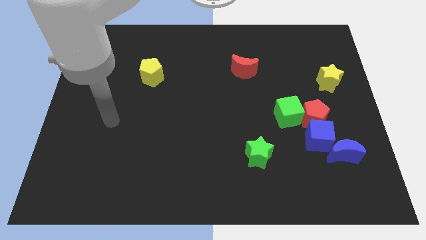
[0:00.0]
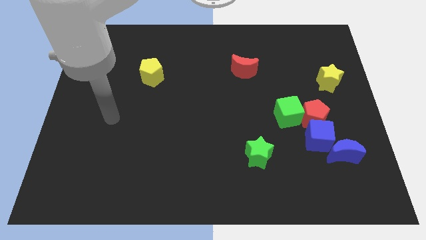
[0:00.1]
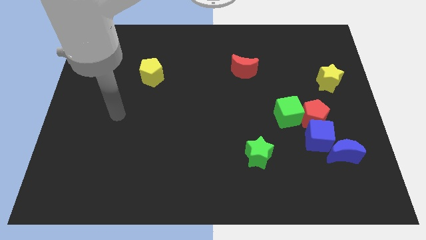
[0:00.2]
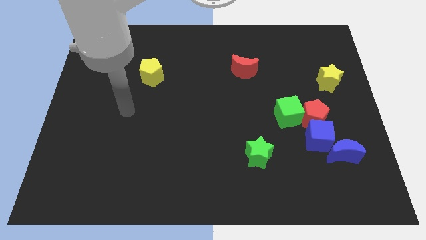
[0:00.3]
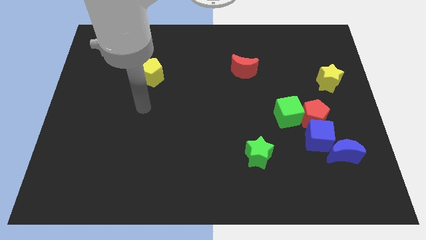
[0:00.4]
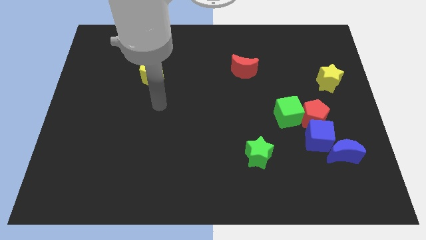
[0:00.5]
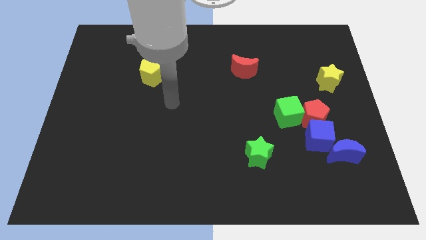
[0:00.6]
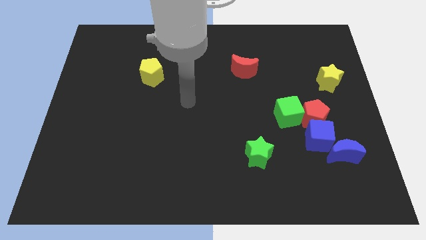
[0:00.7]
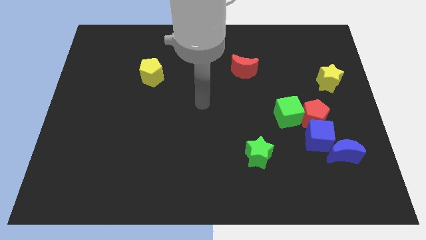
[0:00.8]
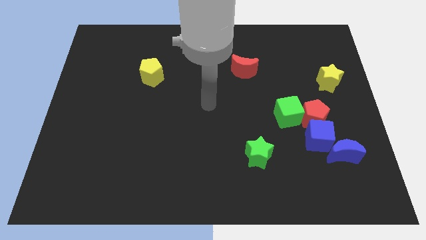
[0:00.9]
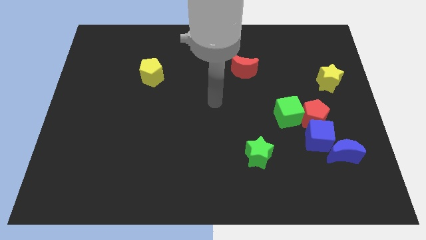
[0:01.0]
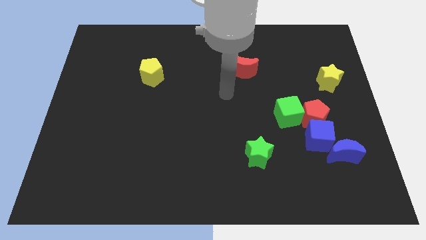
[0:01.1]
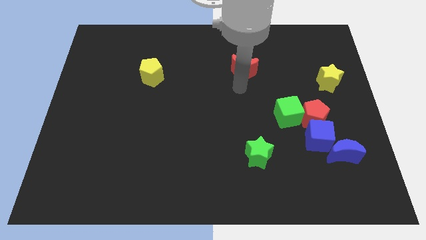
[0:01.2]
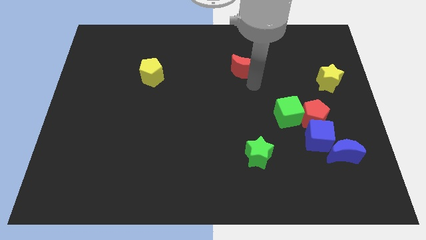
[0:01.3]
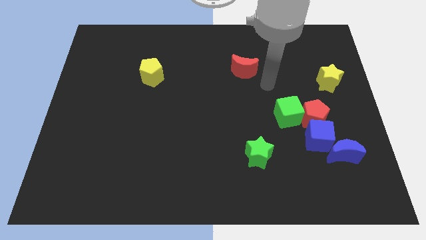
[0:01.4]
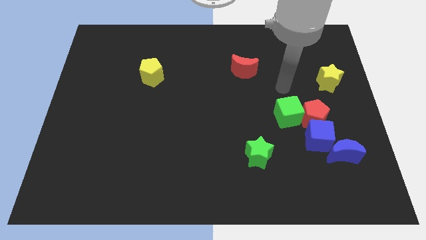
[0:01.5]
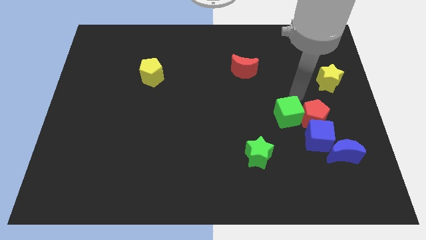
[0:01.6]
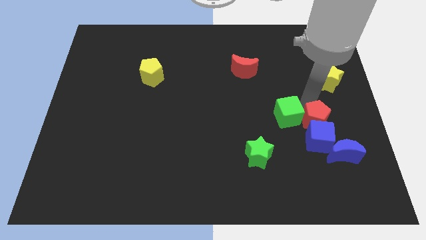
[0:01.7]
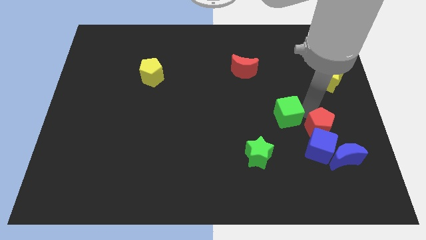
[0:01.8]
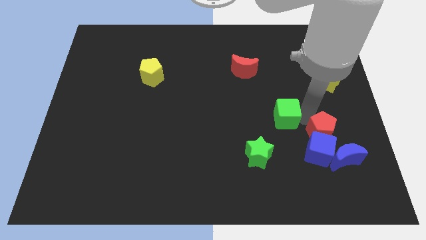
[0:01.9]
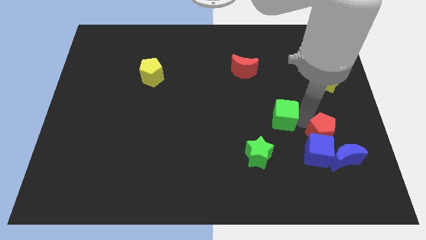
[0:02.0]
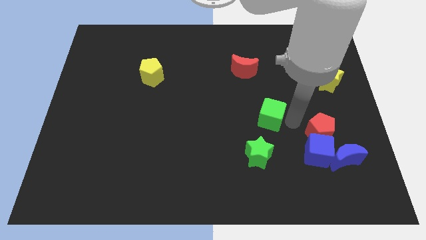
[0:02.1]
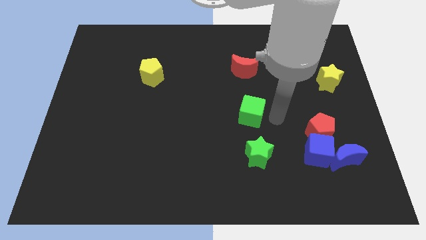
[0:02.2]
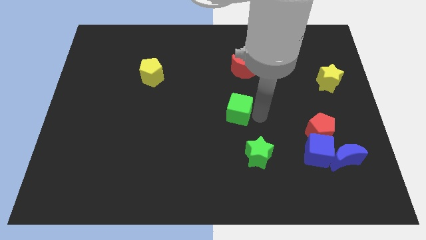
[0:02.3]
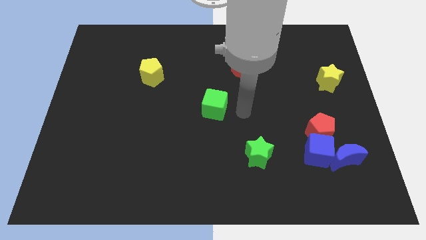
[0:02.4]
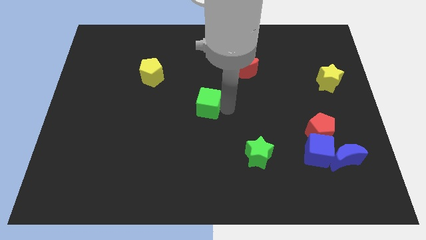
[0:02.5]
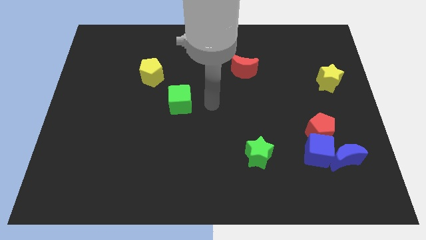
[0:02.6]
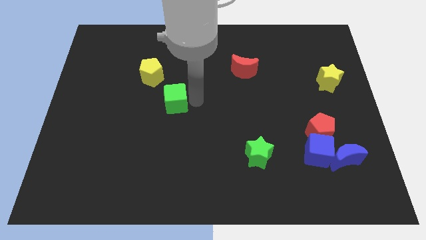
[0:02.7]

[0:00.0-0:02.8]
separate the green cube from the red pentagon

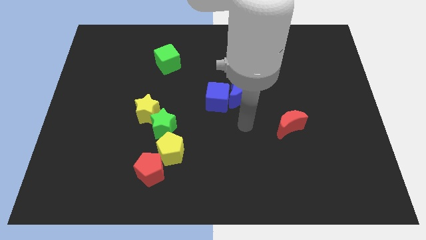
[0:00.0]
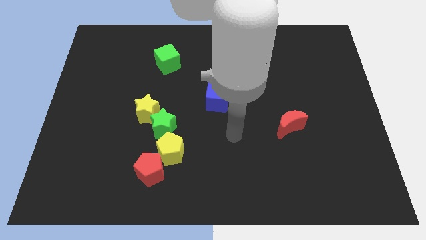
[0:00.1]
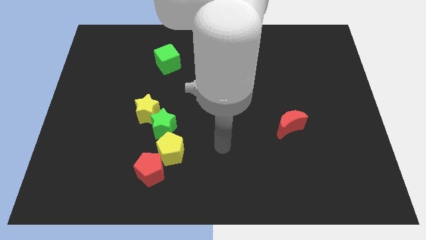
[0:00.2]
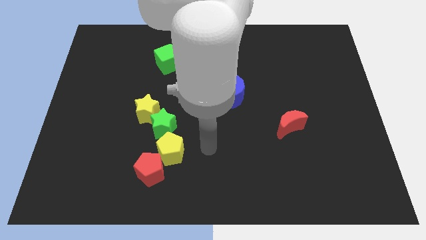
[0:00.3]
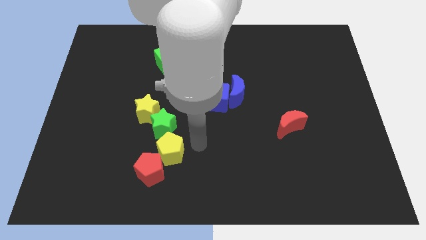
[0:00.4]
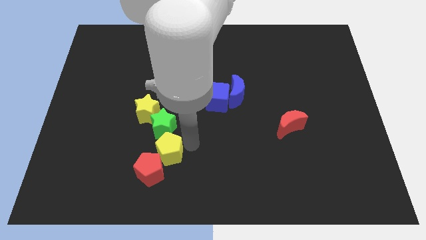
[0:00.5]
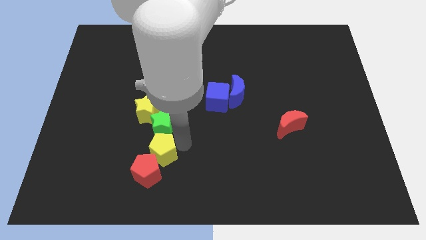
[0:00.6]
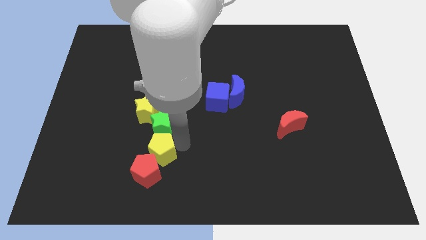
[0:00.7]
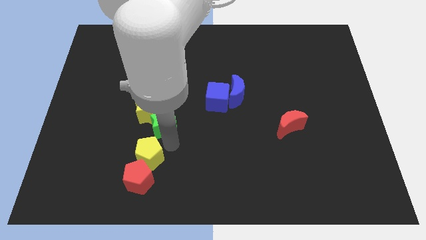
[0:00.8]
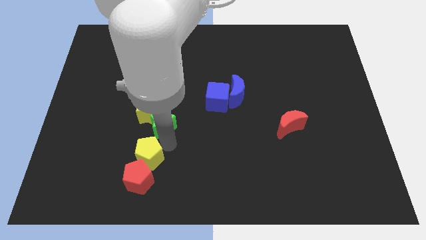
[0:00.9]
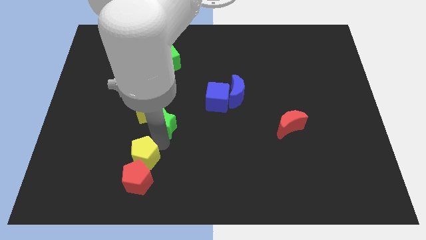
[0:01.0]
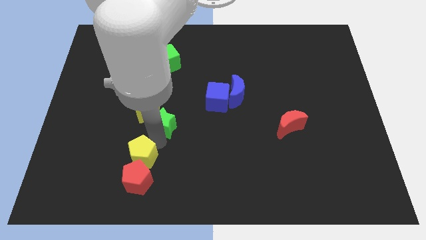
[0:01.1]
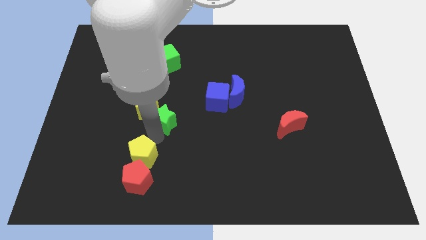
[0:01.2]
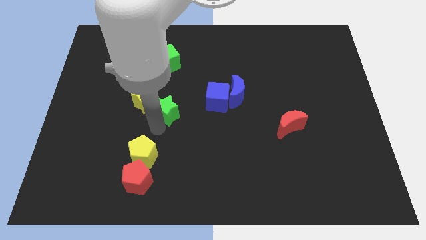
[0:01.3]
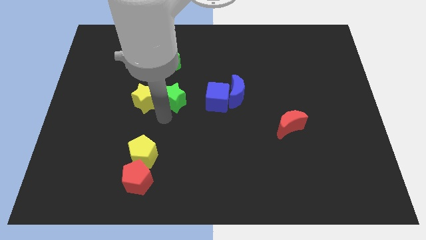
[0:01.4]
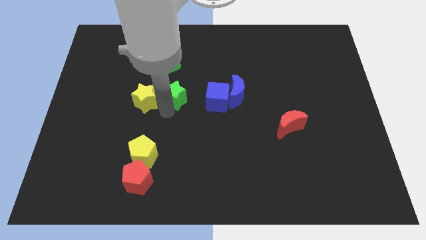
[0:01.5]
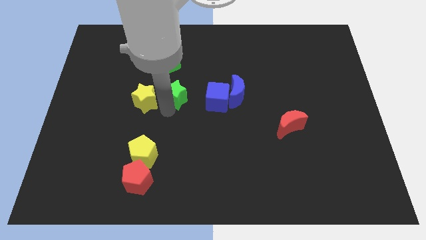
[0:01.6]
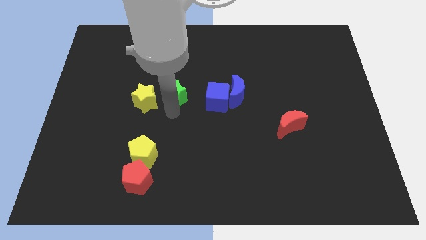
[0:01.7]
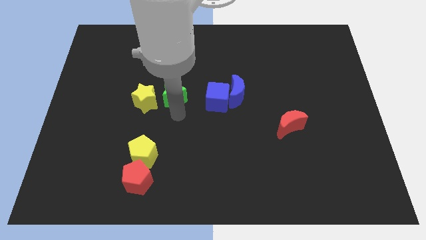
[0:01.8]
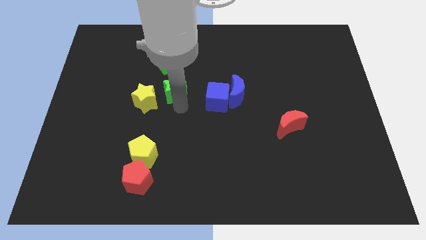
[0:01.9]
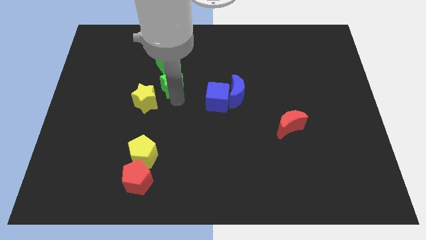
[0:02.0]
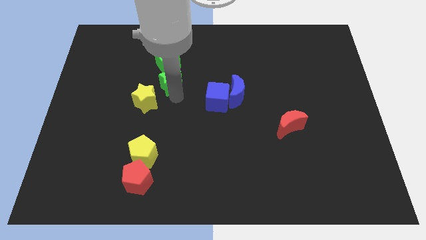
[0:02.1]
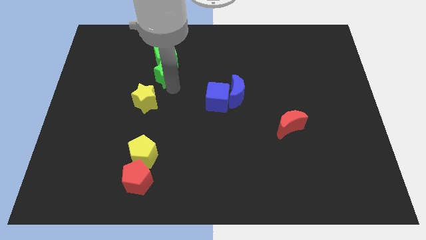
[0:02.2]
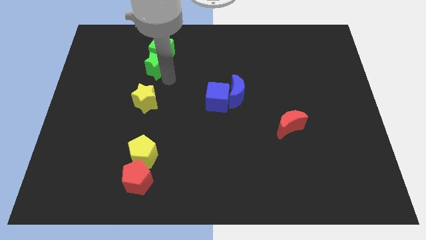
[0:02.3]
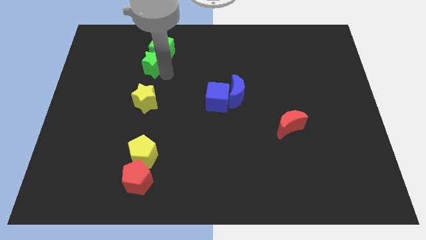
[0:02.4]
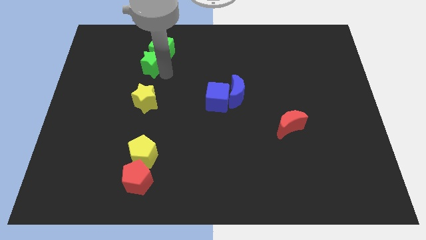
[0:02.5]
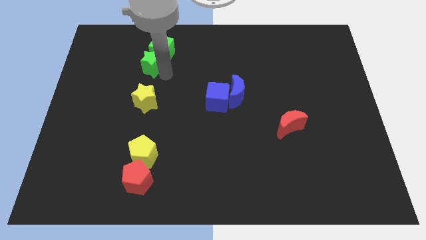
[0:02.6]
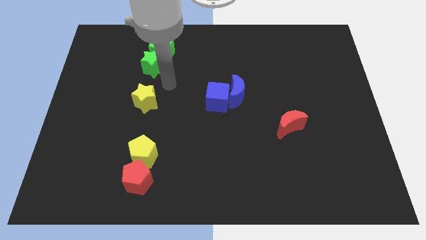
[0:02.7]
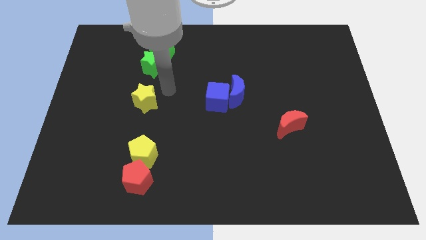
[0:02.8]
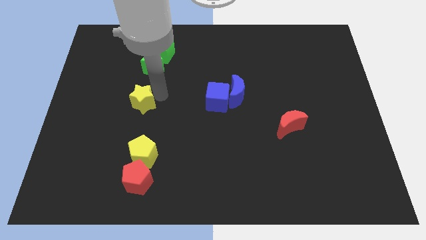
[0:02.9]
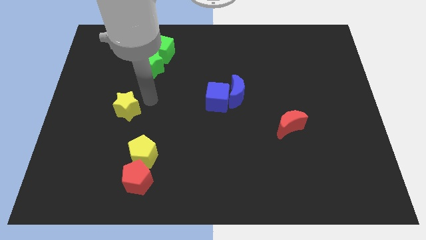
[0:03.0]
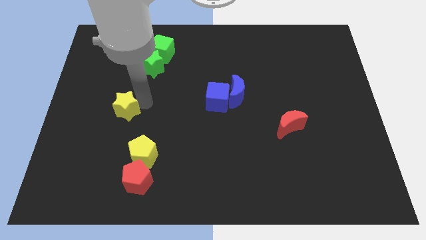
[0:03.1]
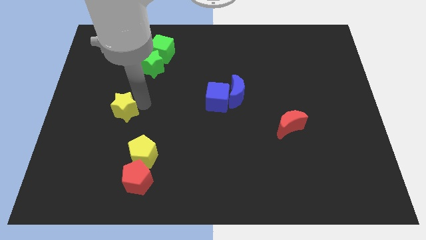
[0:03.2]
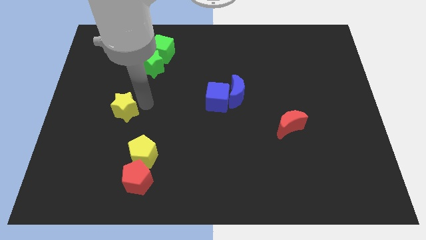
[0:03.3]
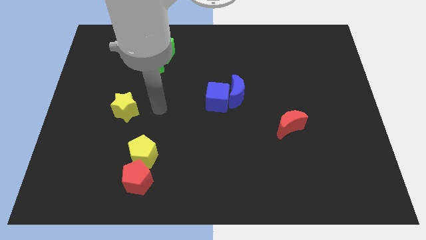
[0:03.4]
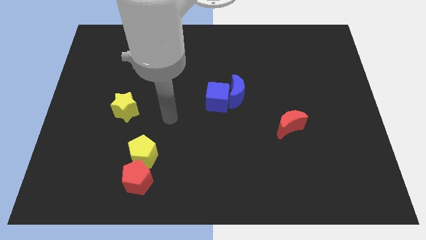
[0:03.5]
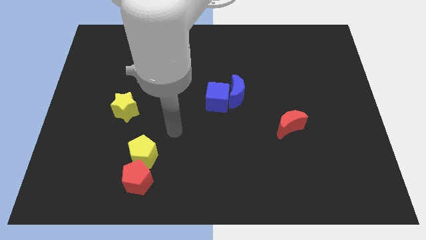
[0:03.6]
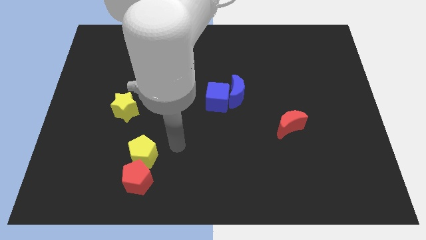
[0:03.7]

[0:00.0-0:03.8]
push the yellow pentagon into the red pentagon

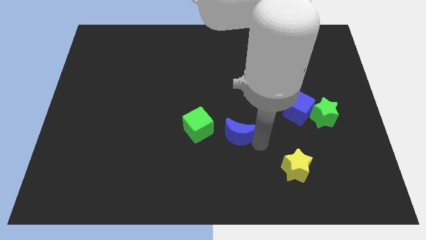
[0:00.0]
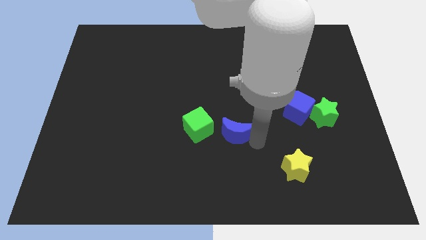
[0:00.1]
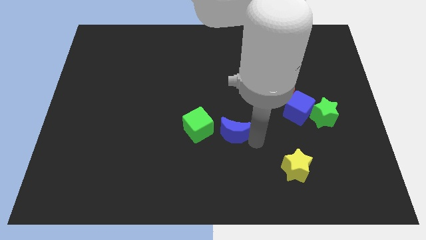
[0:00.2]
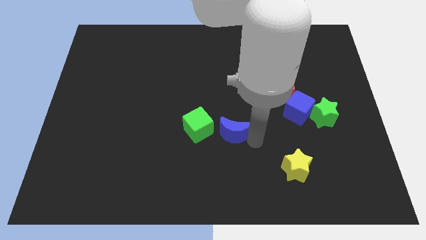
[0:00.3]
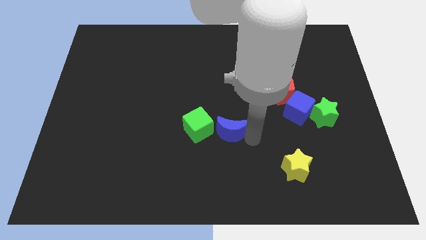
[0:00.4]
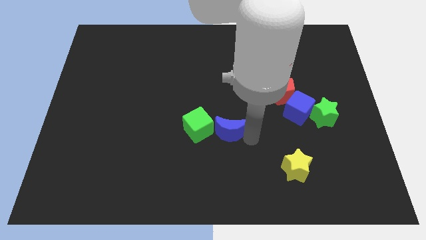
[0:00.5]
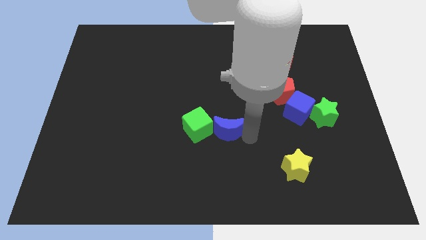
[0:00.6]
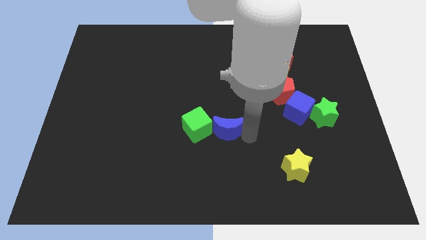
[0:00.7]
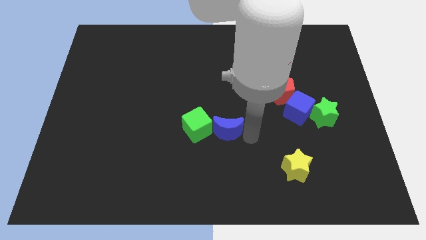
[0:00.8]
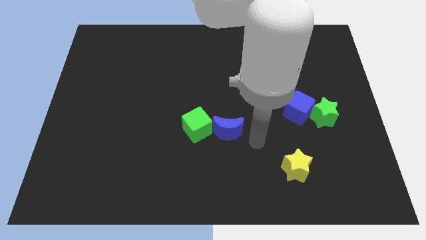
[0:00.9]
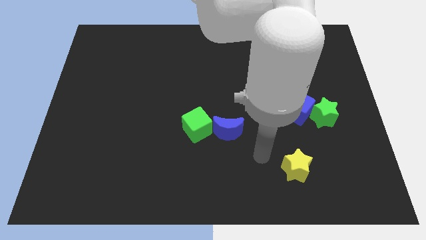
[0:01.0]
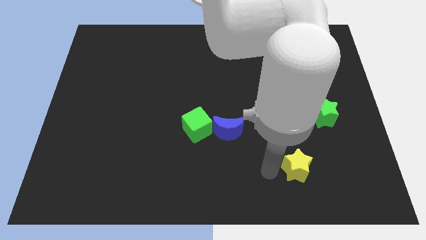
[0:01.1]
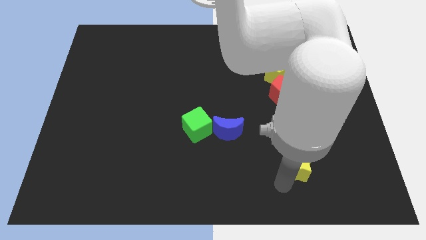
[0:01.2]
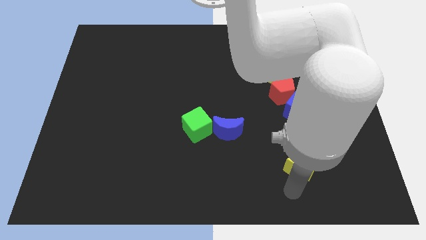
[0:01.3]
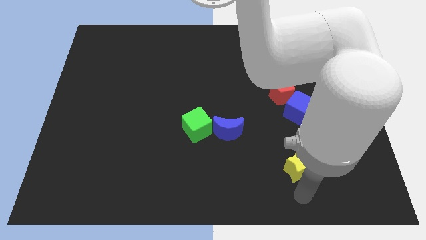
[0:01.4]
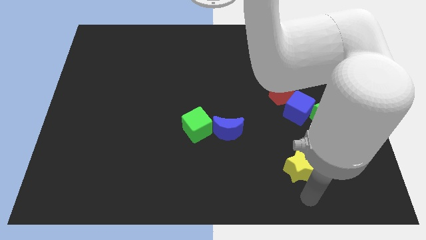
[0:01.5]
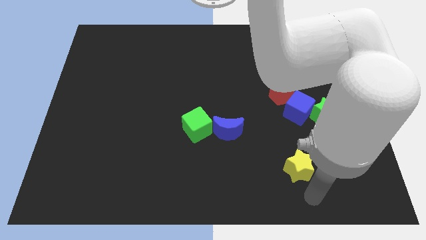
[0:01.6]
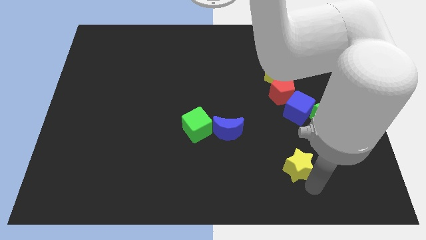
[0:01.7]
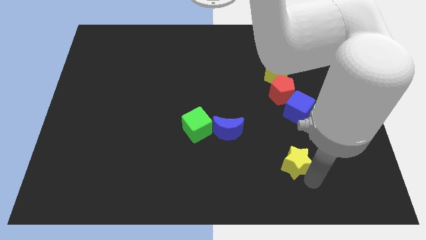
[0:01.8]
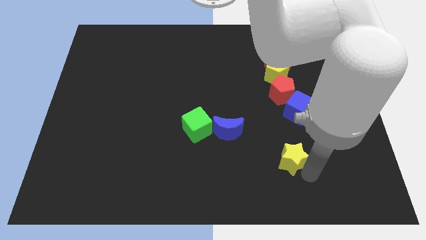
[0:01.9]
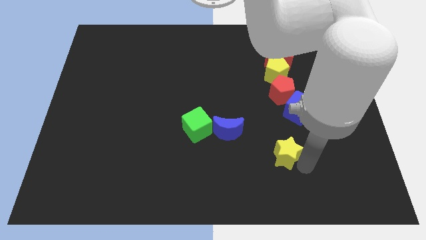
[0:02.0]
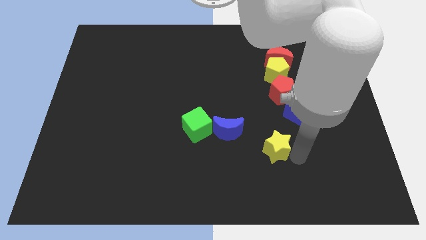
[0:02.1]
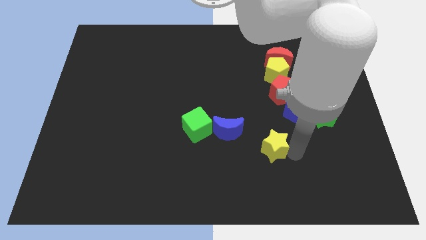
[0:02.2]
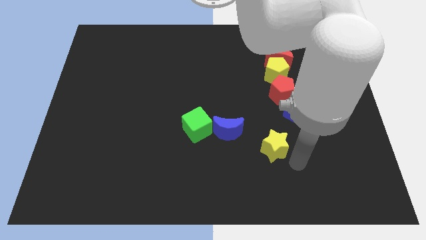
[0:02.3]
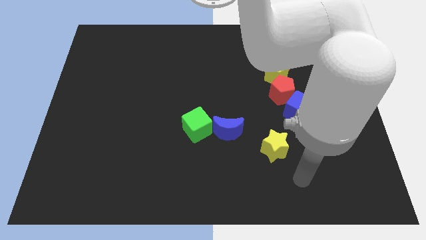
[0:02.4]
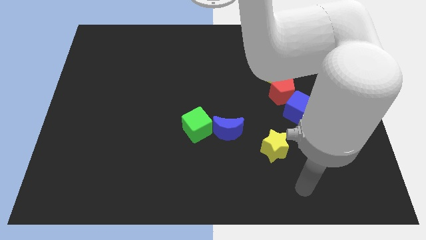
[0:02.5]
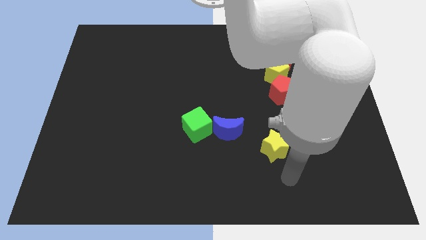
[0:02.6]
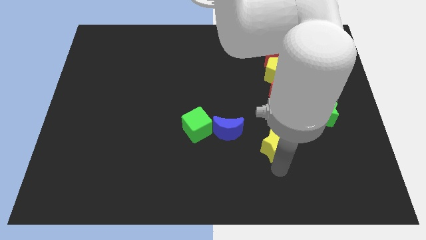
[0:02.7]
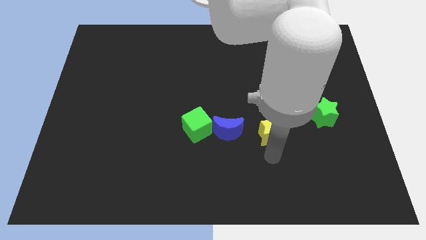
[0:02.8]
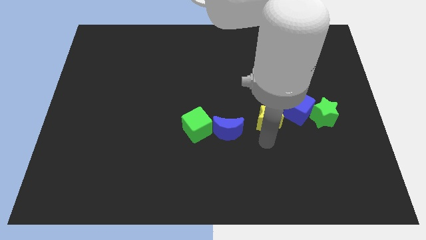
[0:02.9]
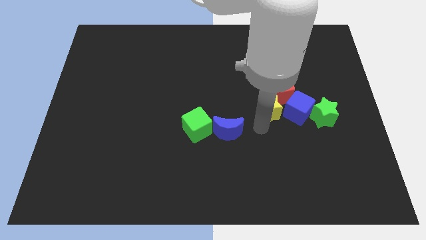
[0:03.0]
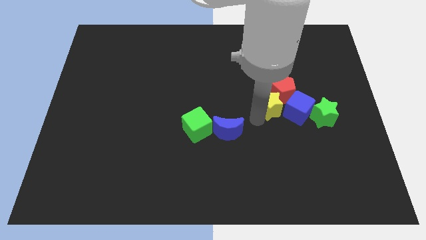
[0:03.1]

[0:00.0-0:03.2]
move the yellow star at the bottom left of the red pentagon
